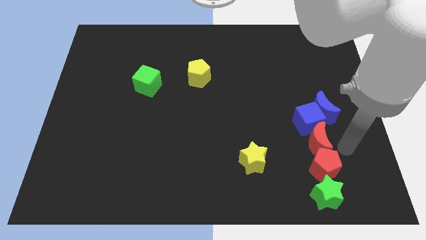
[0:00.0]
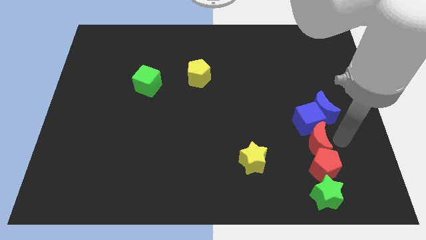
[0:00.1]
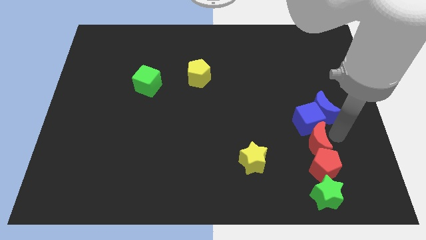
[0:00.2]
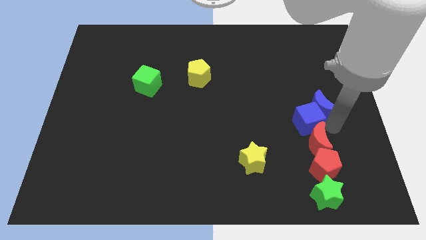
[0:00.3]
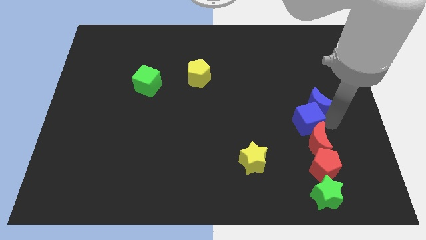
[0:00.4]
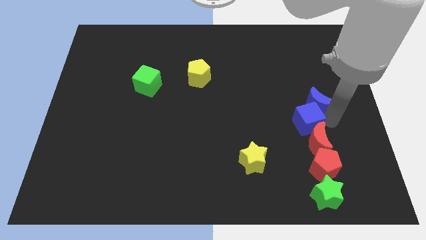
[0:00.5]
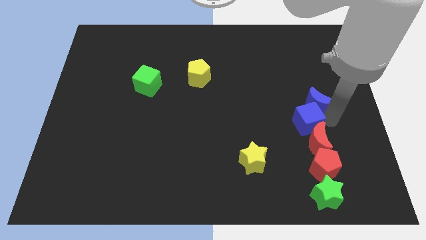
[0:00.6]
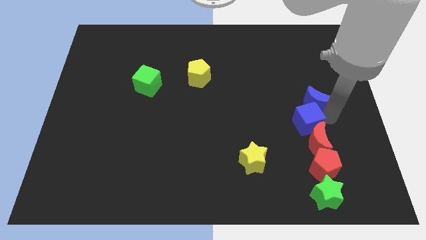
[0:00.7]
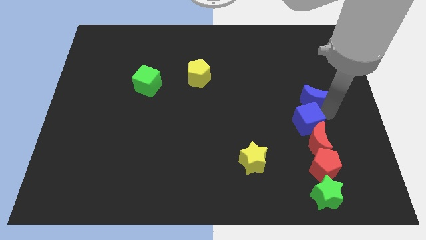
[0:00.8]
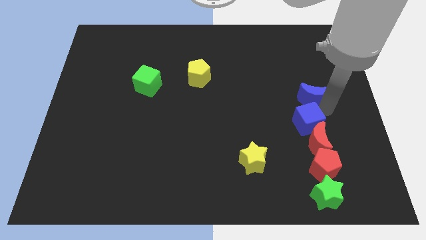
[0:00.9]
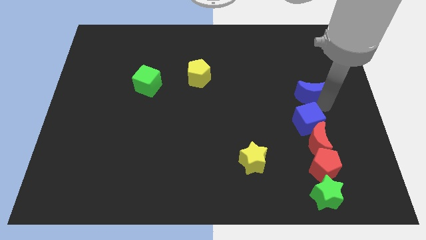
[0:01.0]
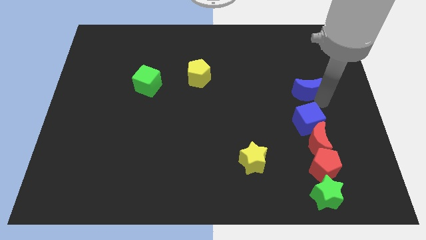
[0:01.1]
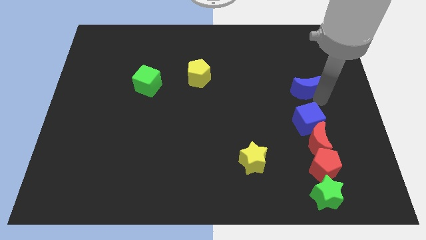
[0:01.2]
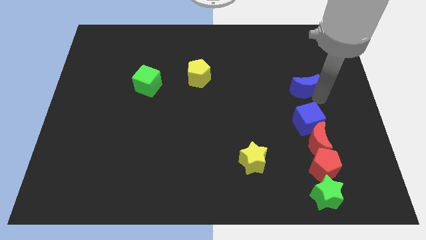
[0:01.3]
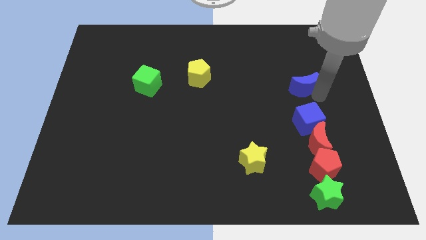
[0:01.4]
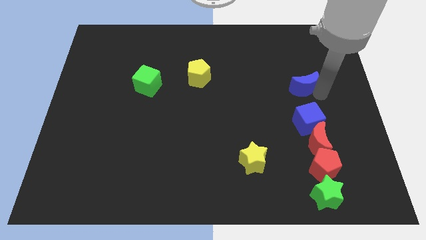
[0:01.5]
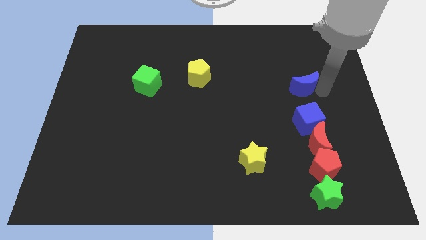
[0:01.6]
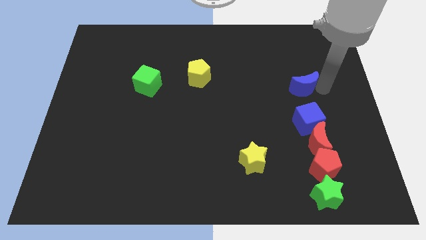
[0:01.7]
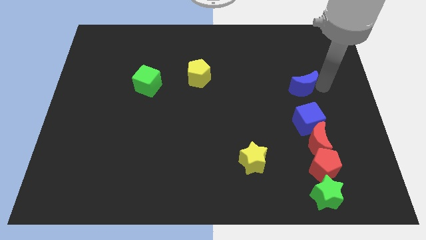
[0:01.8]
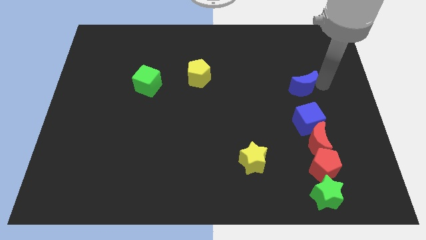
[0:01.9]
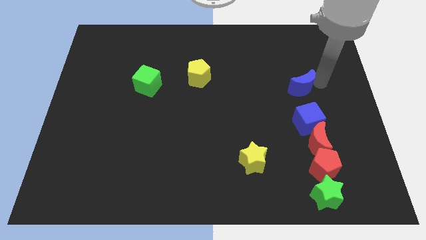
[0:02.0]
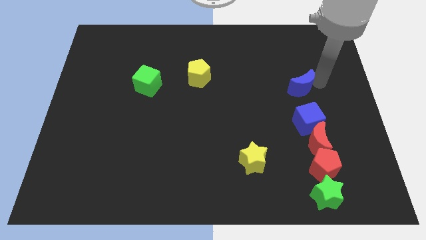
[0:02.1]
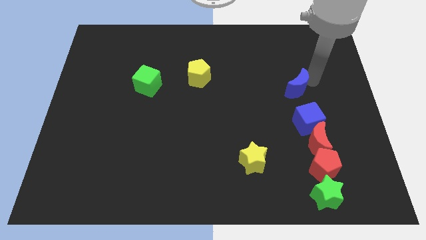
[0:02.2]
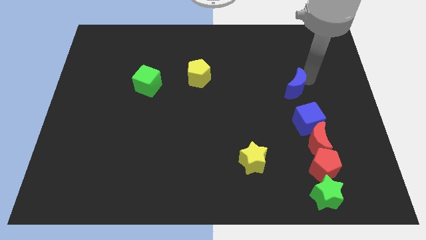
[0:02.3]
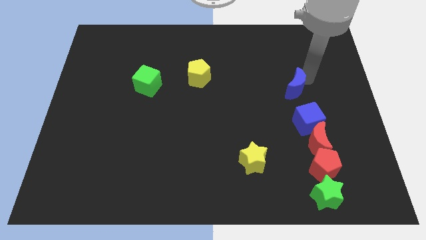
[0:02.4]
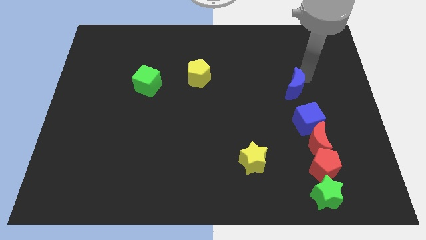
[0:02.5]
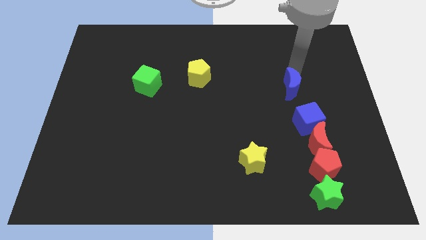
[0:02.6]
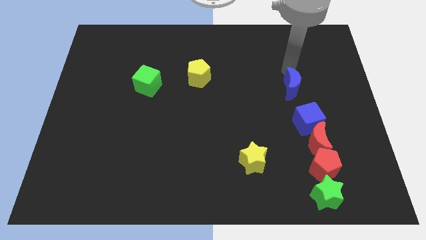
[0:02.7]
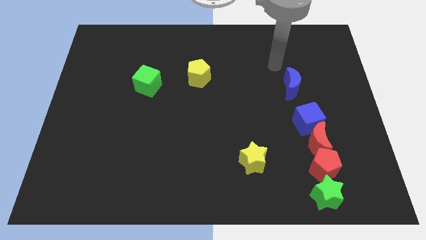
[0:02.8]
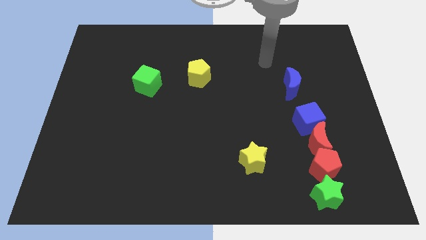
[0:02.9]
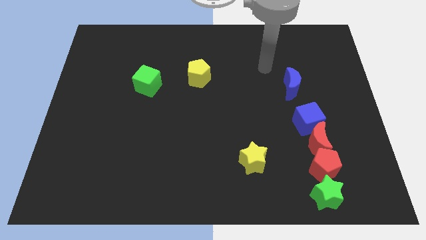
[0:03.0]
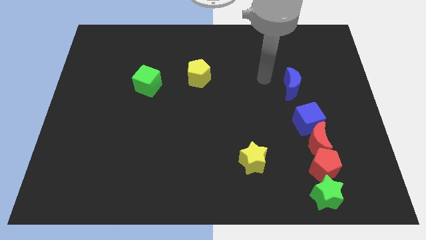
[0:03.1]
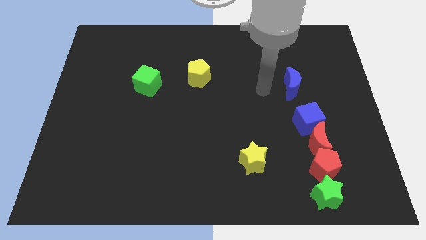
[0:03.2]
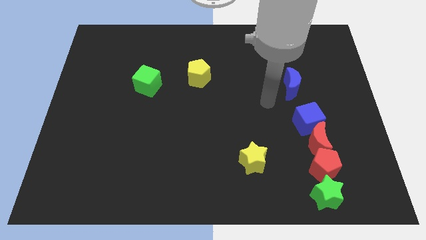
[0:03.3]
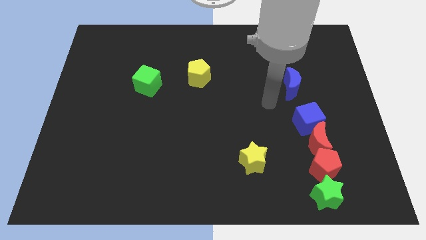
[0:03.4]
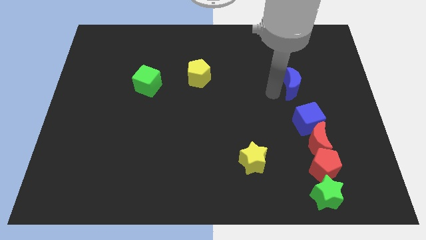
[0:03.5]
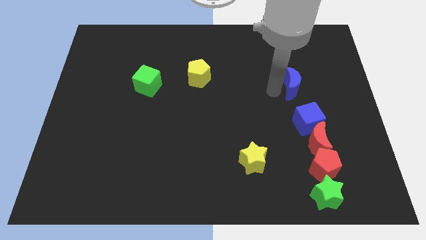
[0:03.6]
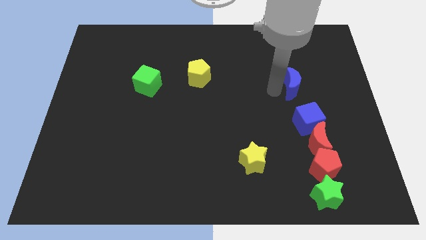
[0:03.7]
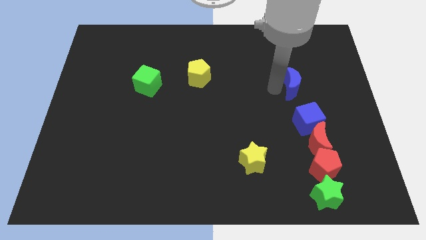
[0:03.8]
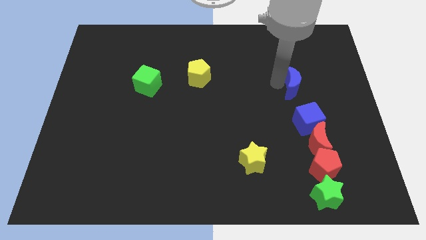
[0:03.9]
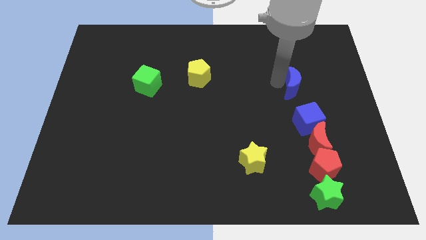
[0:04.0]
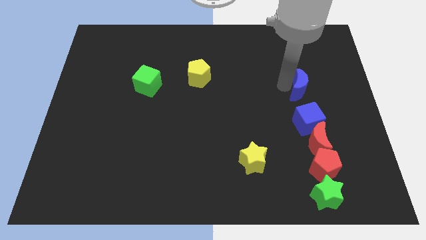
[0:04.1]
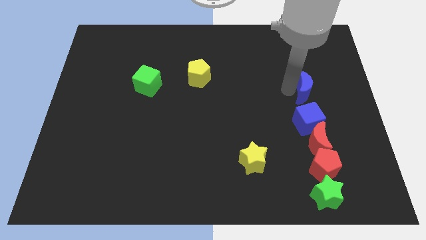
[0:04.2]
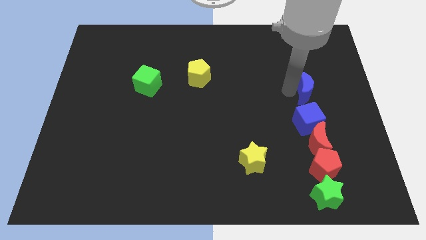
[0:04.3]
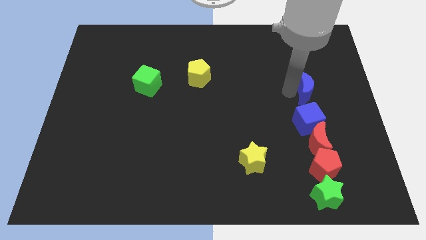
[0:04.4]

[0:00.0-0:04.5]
move the blue moon to the top of the blue cube

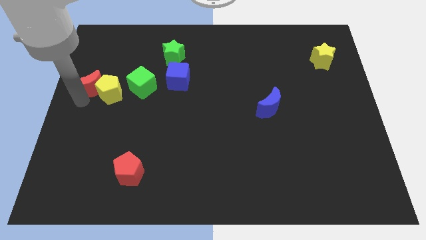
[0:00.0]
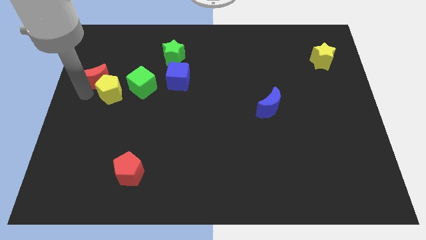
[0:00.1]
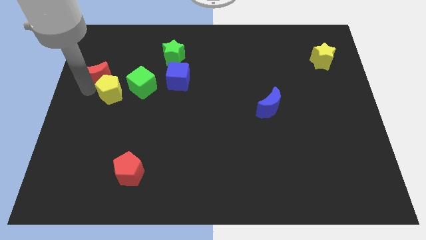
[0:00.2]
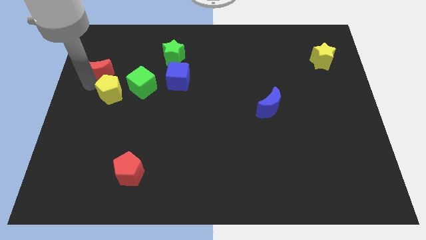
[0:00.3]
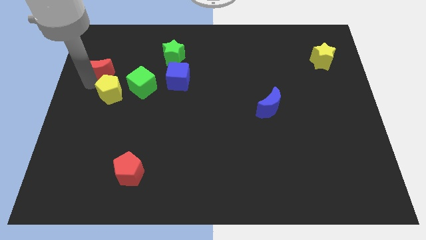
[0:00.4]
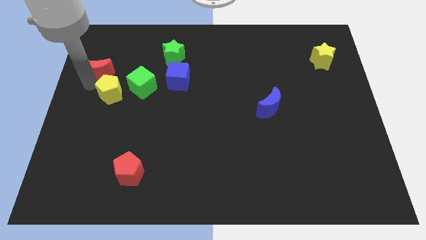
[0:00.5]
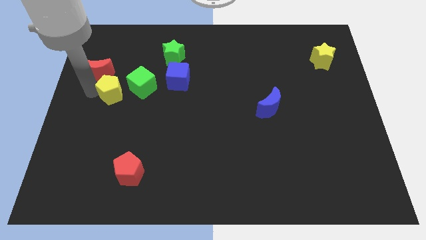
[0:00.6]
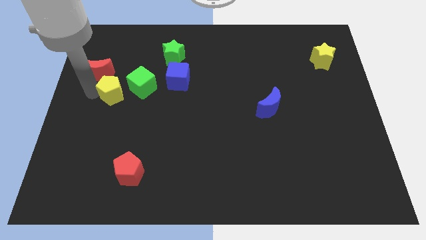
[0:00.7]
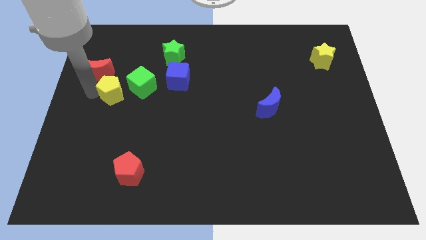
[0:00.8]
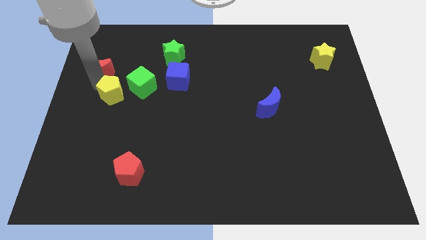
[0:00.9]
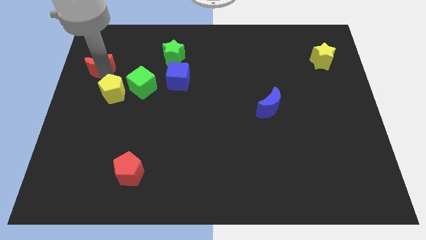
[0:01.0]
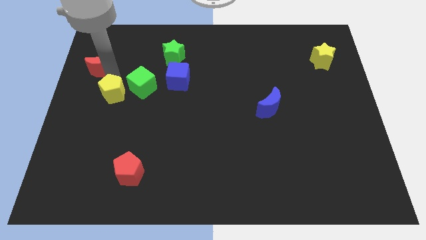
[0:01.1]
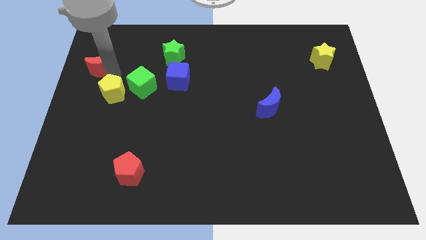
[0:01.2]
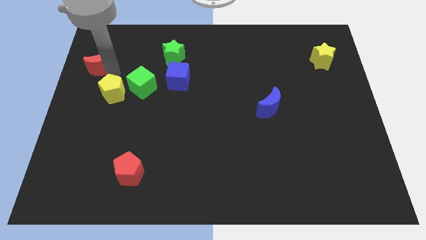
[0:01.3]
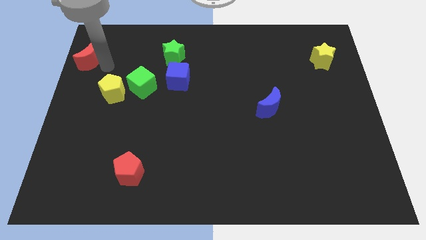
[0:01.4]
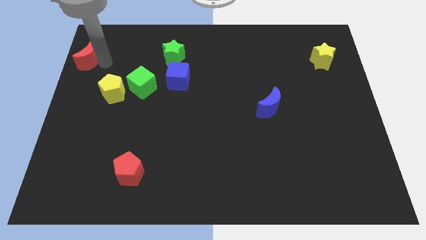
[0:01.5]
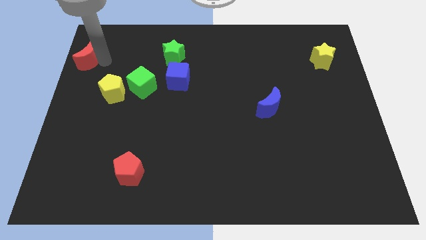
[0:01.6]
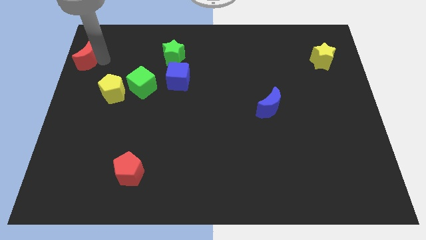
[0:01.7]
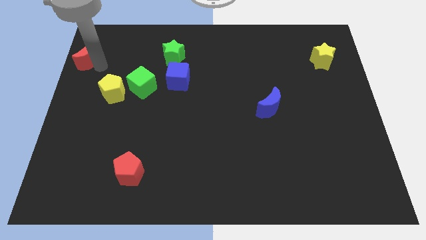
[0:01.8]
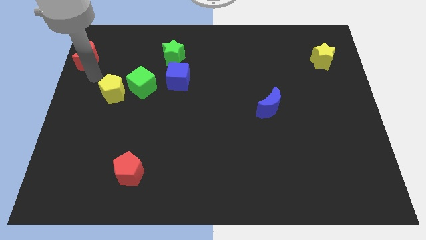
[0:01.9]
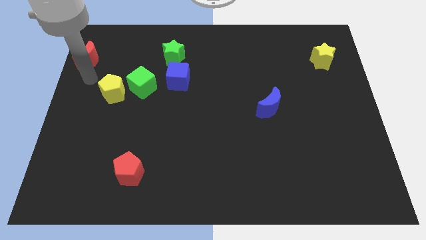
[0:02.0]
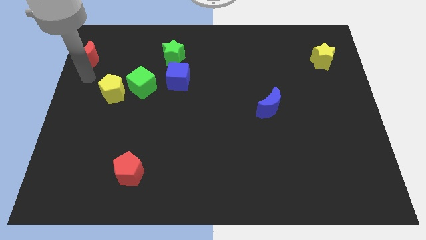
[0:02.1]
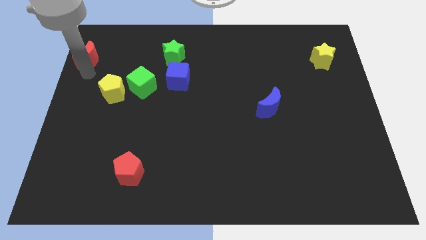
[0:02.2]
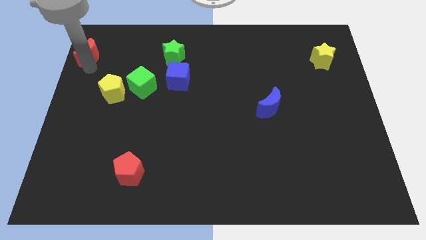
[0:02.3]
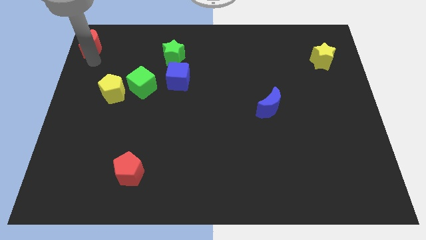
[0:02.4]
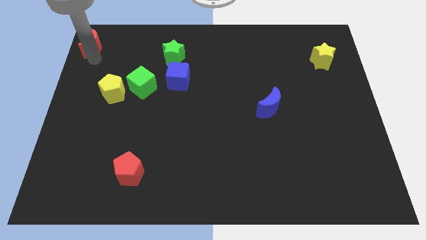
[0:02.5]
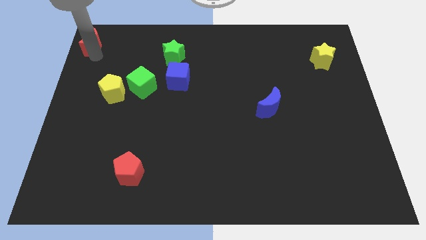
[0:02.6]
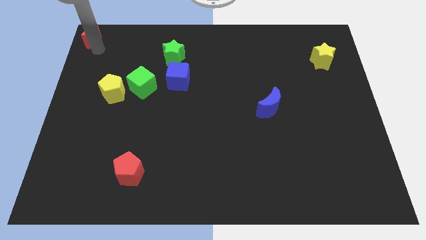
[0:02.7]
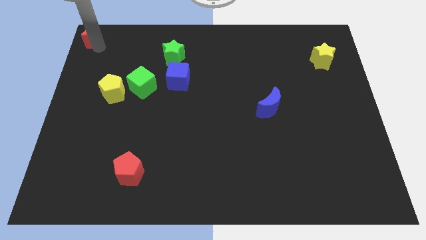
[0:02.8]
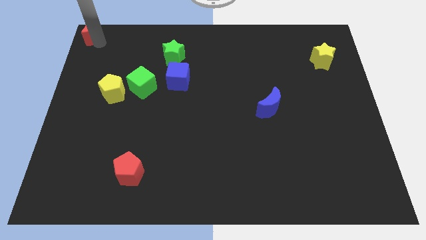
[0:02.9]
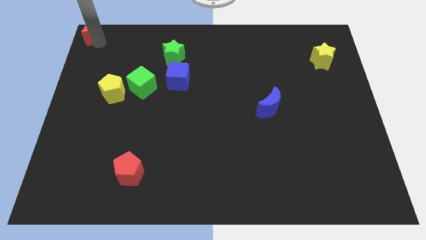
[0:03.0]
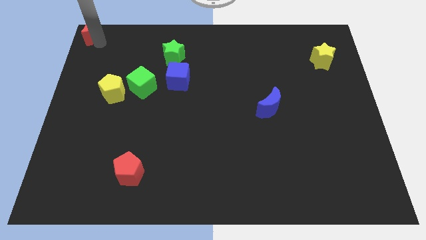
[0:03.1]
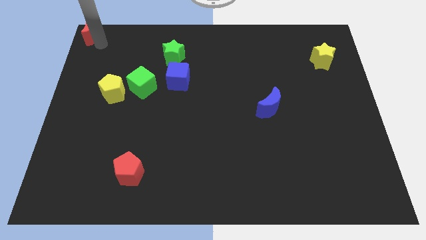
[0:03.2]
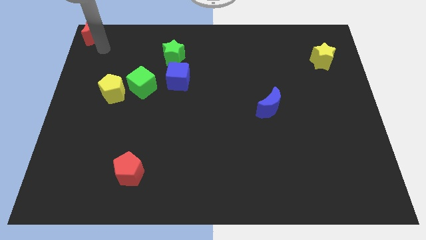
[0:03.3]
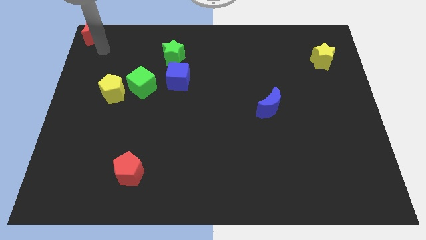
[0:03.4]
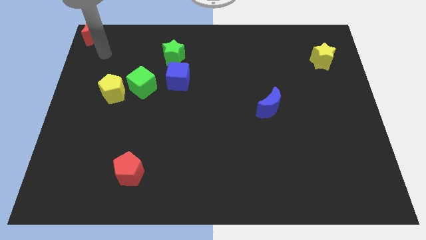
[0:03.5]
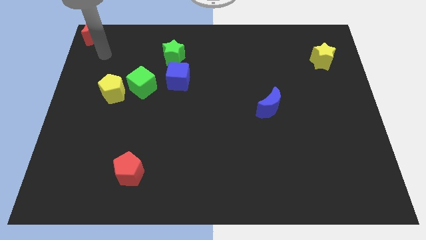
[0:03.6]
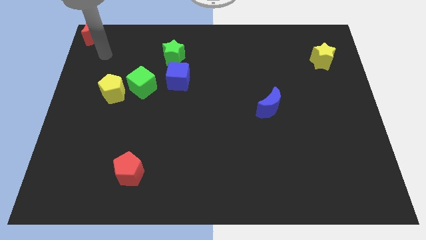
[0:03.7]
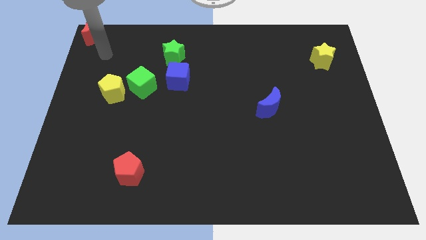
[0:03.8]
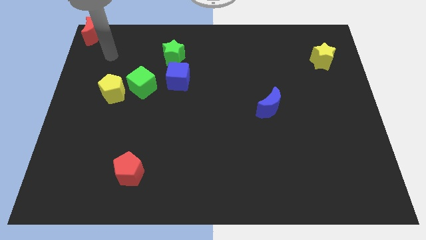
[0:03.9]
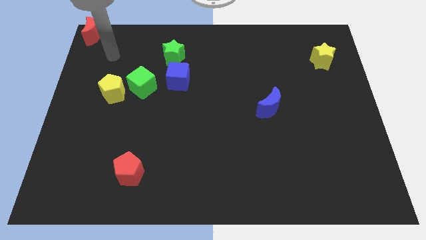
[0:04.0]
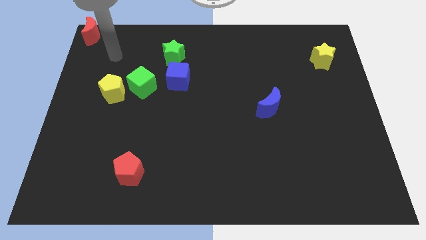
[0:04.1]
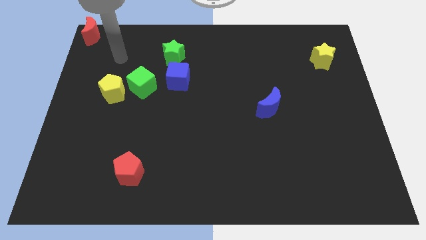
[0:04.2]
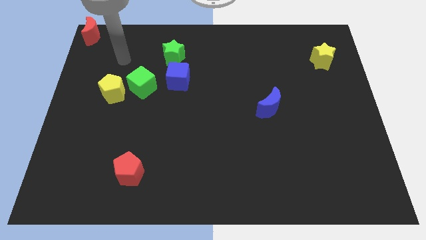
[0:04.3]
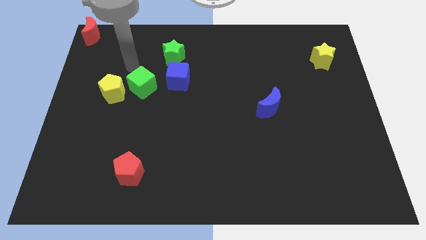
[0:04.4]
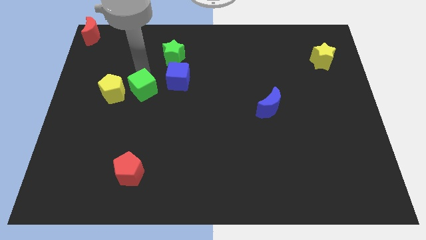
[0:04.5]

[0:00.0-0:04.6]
place the red crescent at the top left corner of the board
